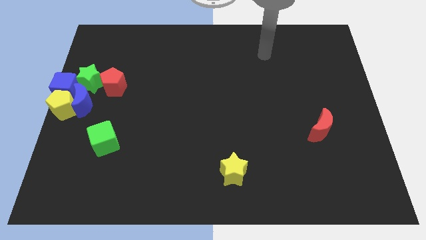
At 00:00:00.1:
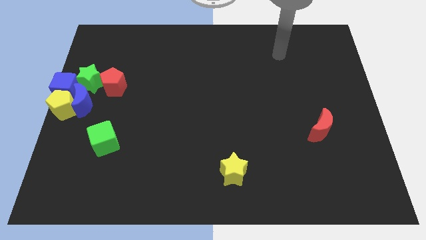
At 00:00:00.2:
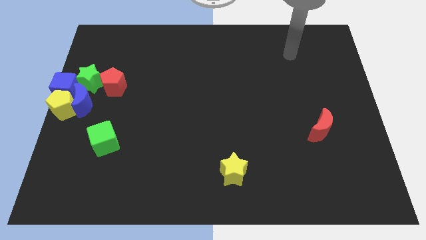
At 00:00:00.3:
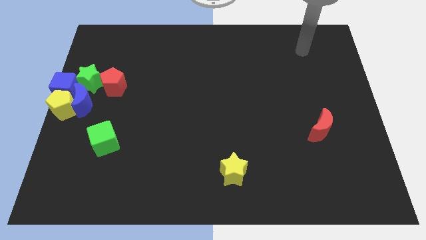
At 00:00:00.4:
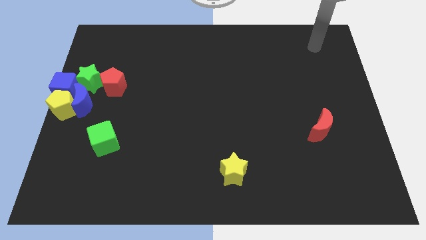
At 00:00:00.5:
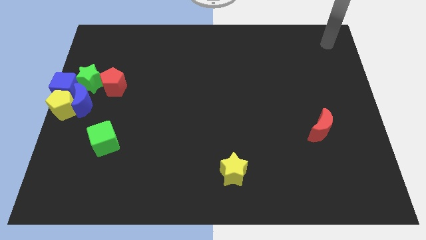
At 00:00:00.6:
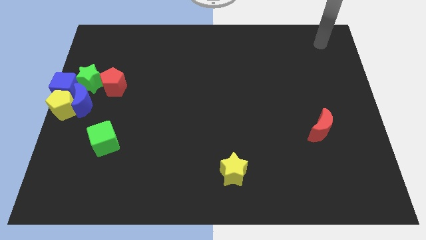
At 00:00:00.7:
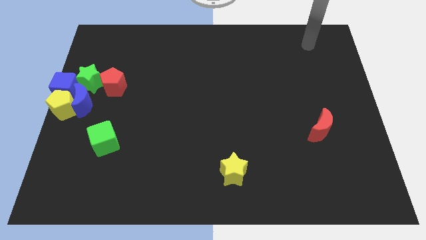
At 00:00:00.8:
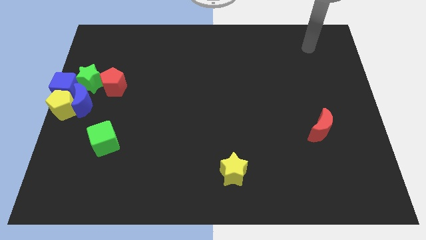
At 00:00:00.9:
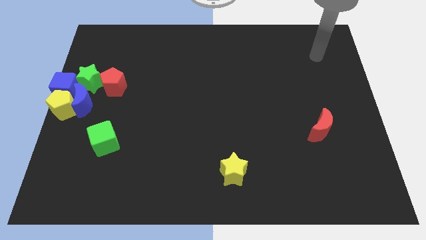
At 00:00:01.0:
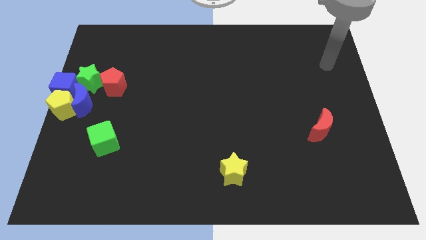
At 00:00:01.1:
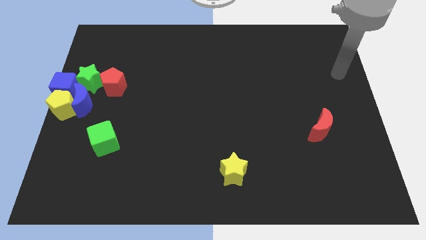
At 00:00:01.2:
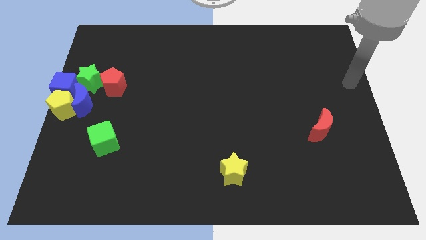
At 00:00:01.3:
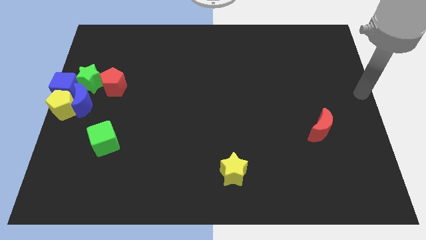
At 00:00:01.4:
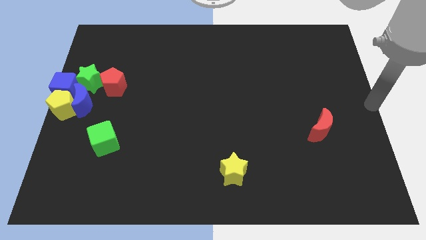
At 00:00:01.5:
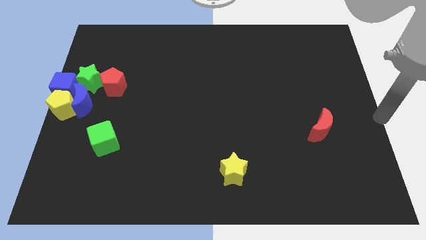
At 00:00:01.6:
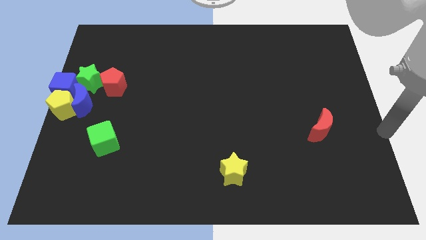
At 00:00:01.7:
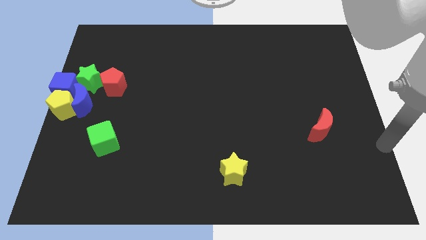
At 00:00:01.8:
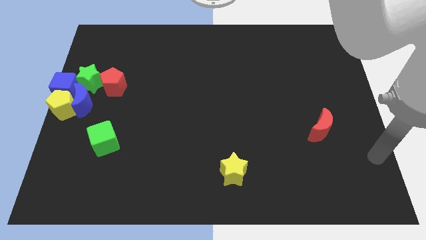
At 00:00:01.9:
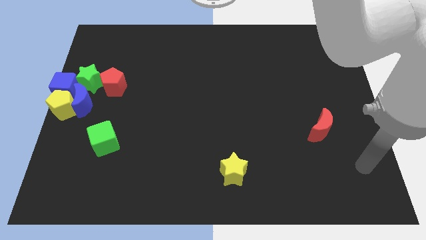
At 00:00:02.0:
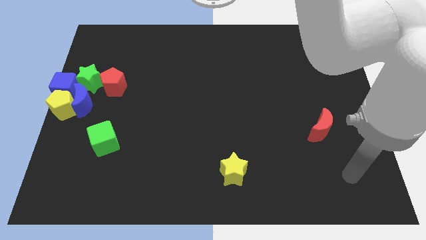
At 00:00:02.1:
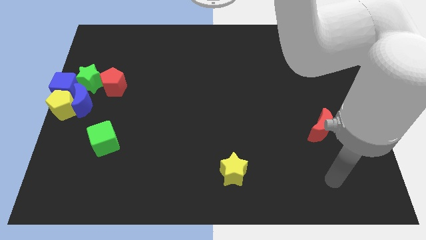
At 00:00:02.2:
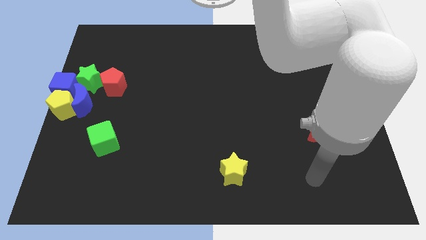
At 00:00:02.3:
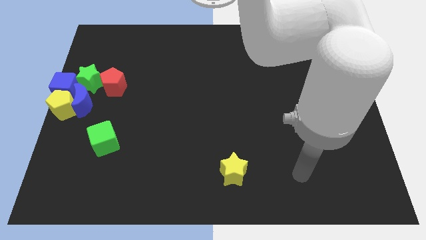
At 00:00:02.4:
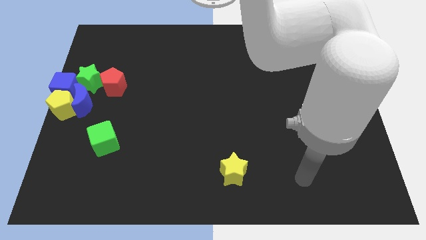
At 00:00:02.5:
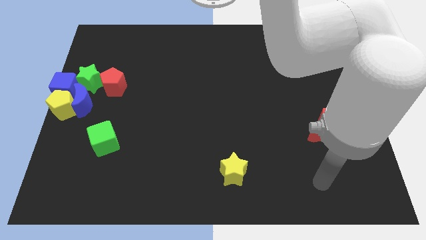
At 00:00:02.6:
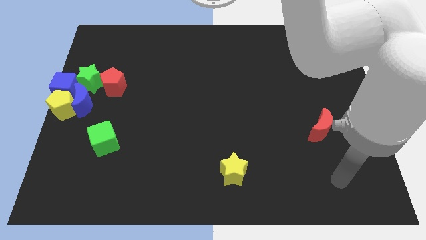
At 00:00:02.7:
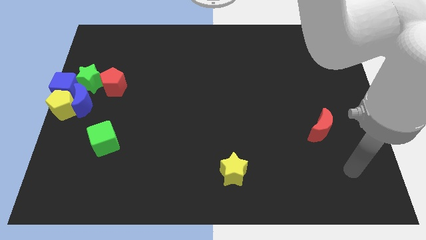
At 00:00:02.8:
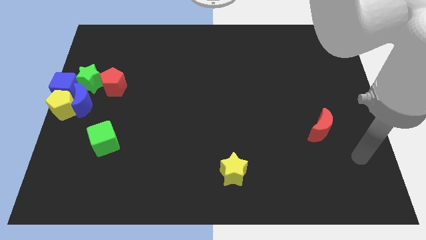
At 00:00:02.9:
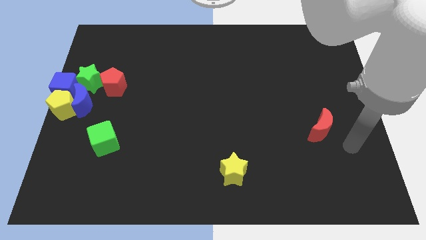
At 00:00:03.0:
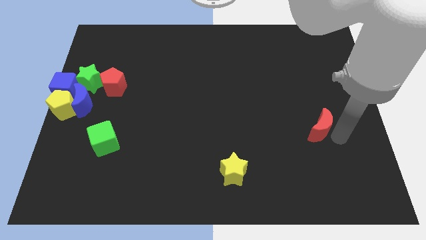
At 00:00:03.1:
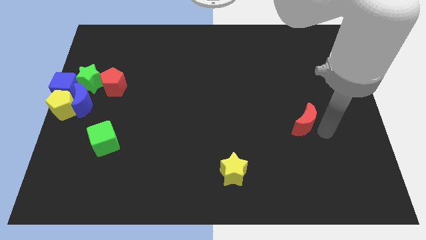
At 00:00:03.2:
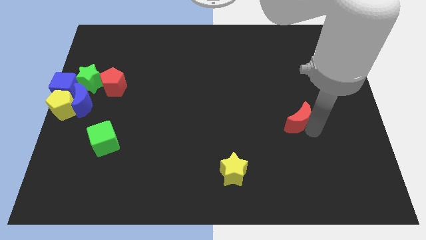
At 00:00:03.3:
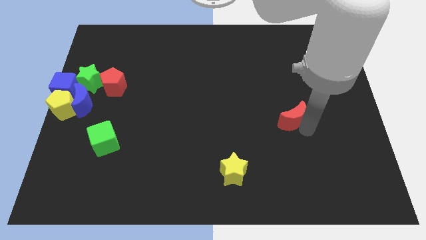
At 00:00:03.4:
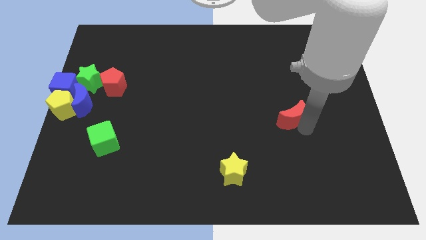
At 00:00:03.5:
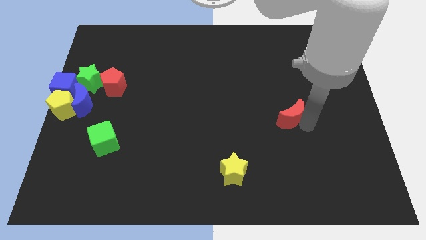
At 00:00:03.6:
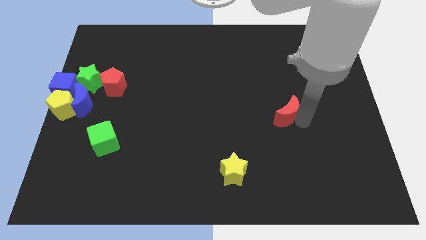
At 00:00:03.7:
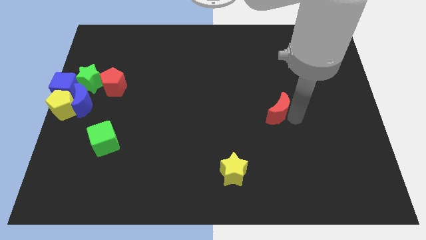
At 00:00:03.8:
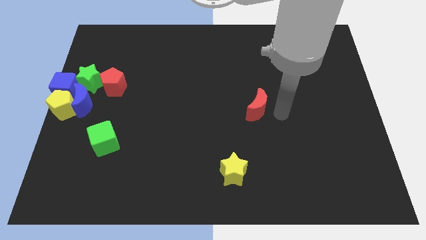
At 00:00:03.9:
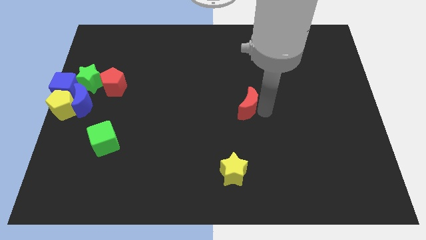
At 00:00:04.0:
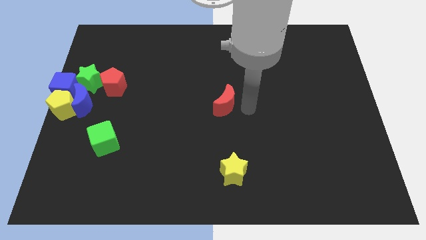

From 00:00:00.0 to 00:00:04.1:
move red moon to the center

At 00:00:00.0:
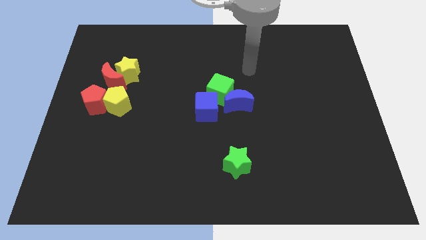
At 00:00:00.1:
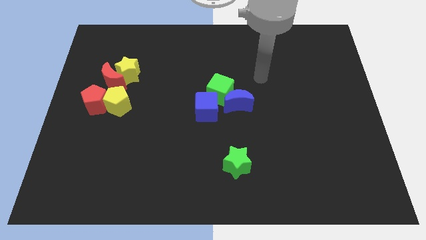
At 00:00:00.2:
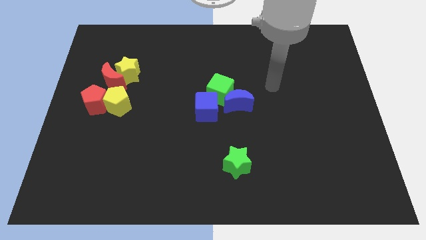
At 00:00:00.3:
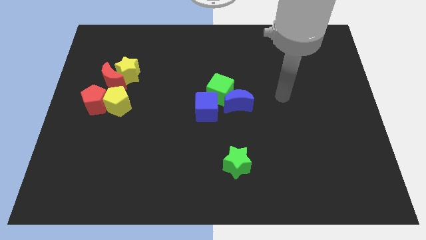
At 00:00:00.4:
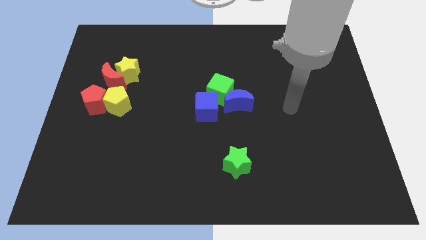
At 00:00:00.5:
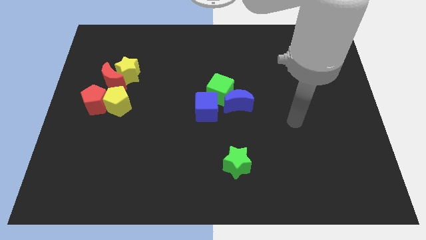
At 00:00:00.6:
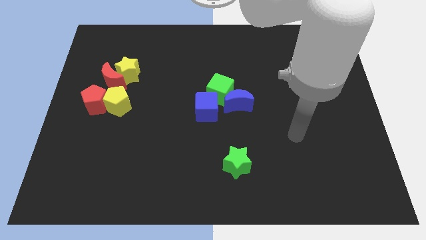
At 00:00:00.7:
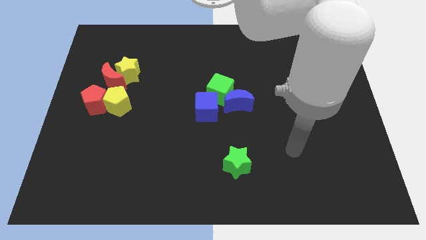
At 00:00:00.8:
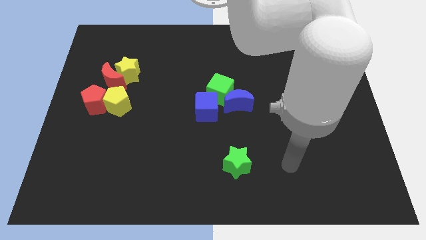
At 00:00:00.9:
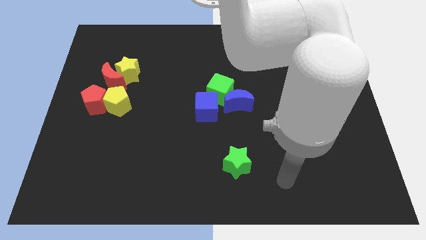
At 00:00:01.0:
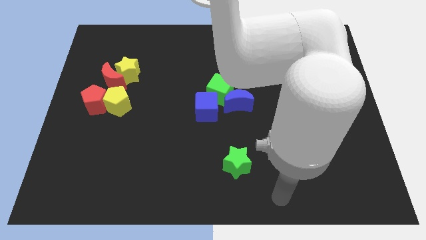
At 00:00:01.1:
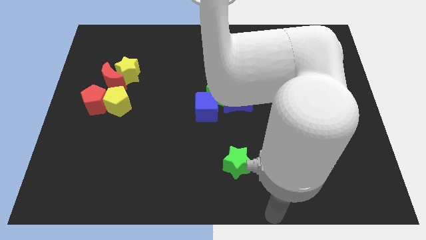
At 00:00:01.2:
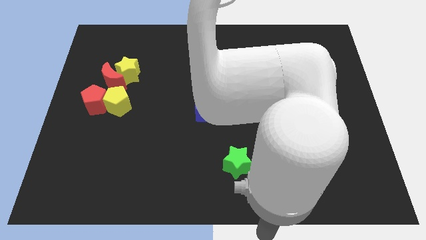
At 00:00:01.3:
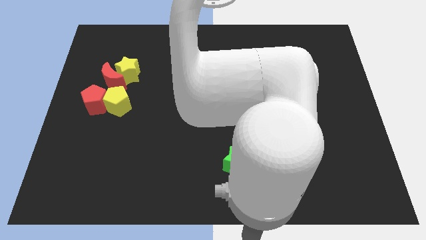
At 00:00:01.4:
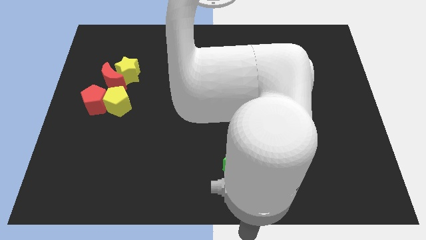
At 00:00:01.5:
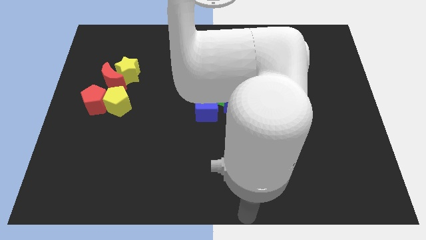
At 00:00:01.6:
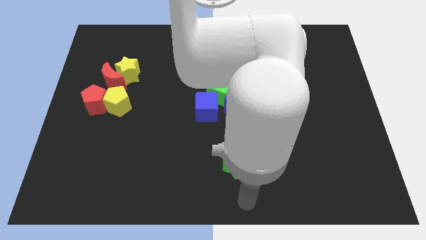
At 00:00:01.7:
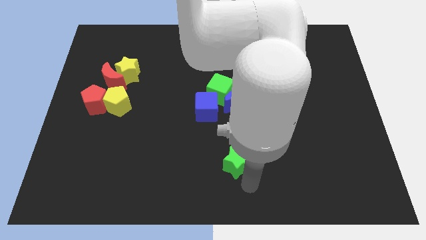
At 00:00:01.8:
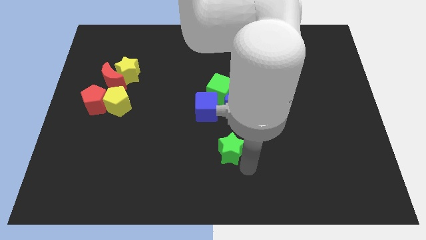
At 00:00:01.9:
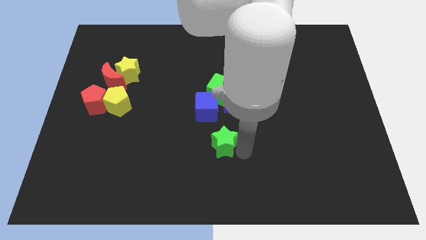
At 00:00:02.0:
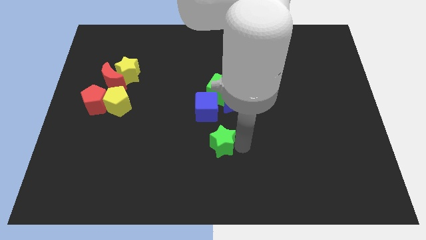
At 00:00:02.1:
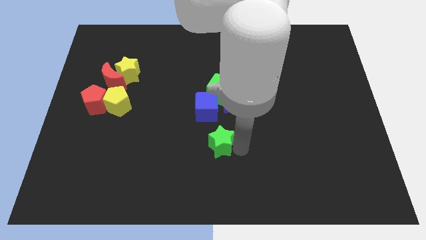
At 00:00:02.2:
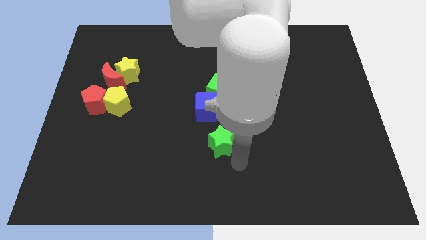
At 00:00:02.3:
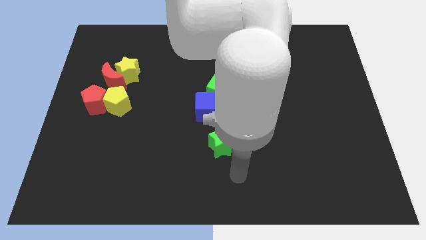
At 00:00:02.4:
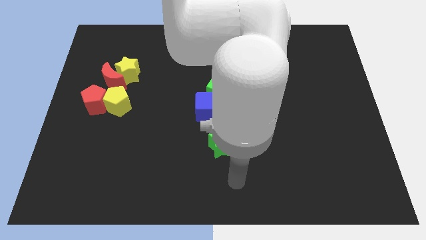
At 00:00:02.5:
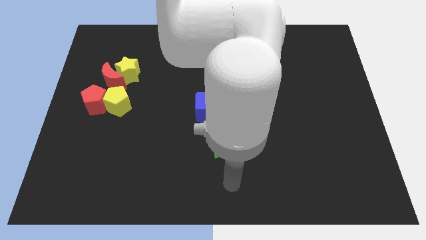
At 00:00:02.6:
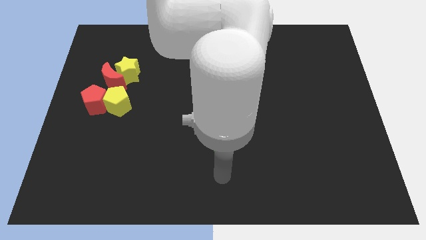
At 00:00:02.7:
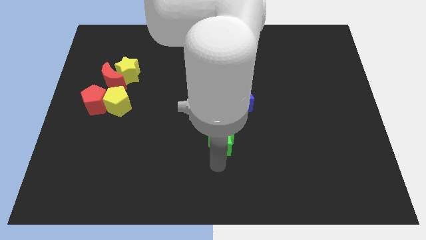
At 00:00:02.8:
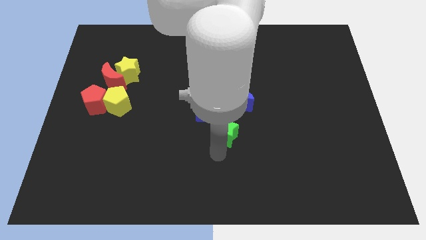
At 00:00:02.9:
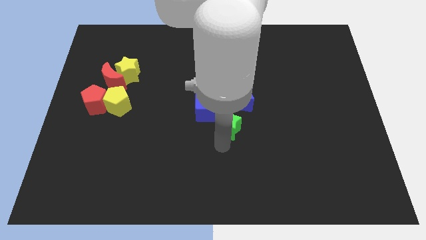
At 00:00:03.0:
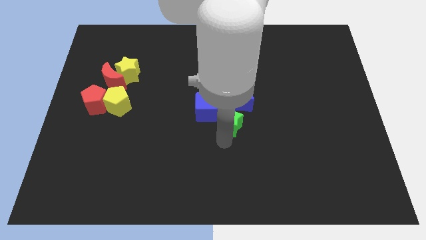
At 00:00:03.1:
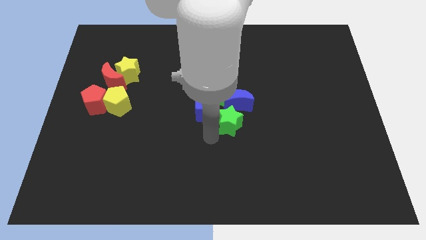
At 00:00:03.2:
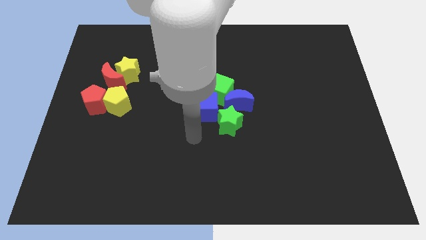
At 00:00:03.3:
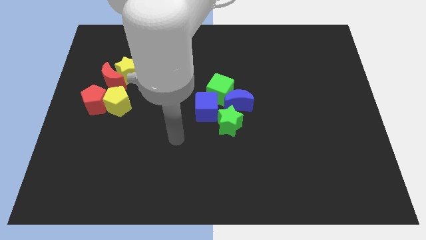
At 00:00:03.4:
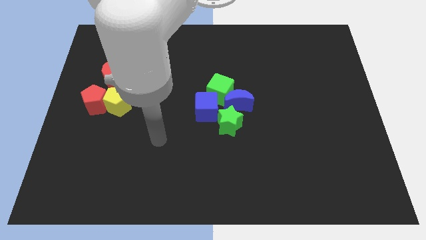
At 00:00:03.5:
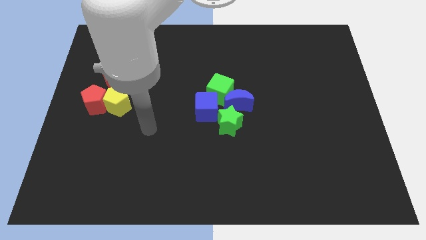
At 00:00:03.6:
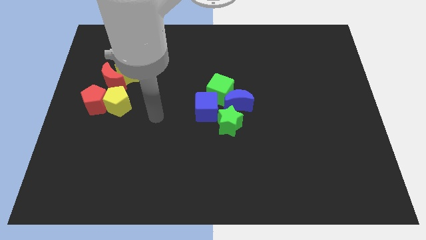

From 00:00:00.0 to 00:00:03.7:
add the green star to the group of blocks at the center of the board

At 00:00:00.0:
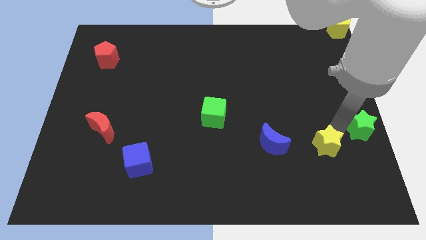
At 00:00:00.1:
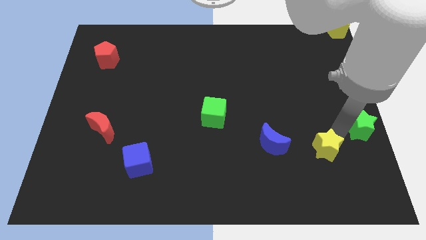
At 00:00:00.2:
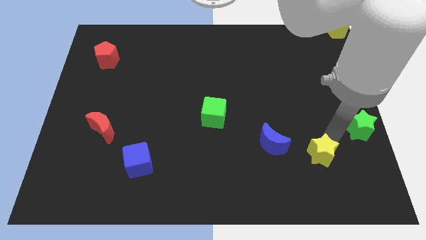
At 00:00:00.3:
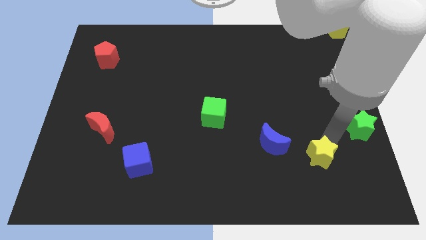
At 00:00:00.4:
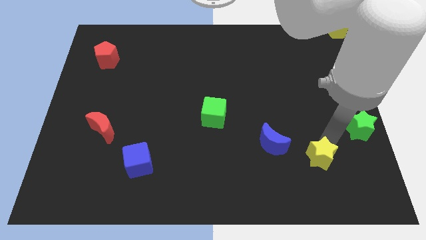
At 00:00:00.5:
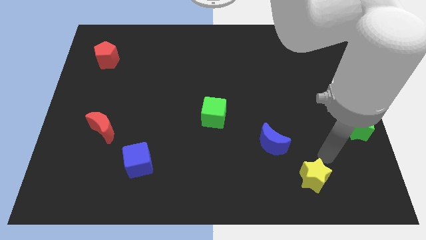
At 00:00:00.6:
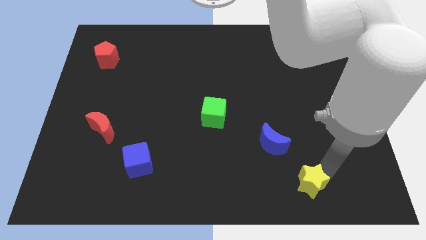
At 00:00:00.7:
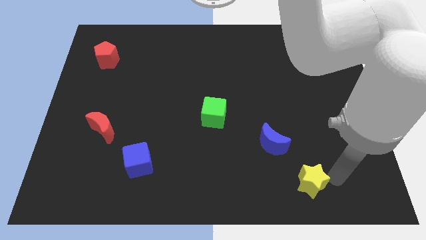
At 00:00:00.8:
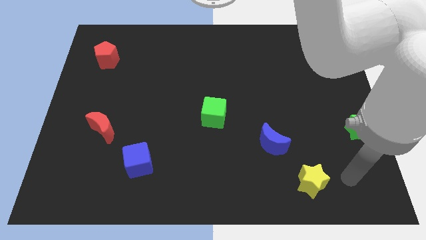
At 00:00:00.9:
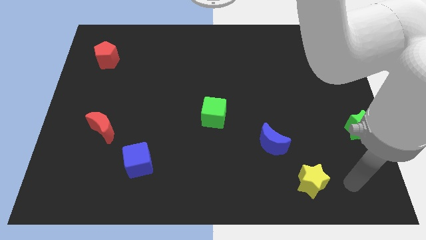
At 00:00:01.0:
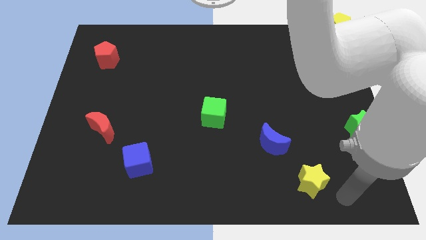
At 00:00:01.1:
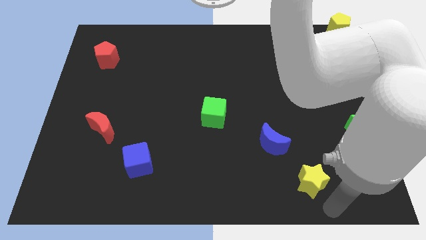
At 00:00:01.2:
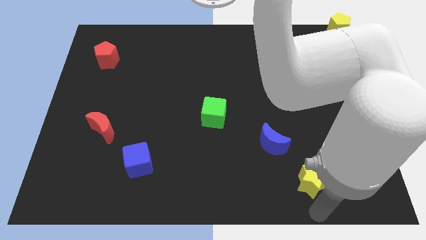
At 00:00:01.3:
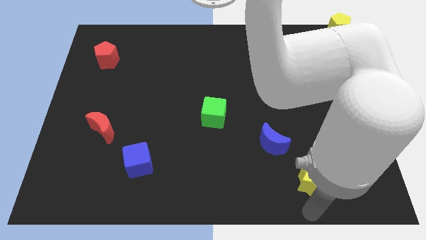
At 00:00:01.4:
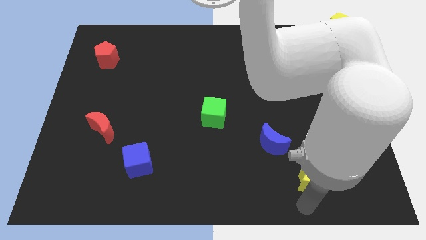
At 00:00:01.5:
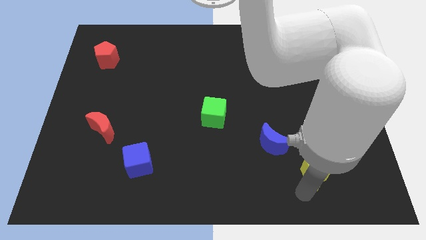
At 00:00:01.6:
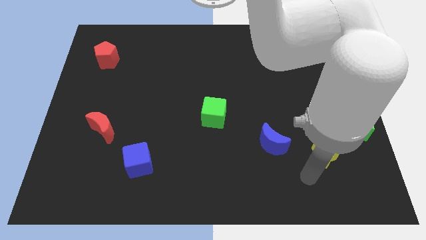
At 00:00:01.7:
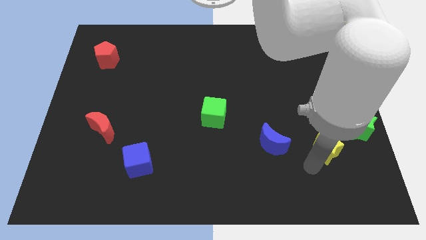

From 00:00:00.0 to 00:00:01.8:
place the yellow star right diagonally towards blue crescent
